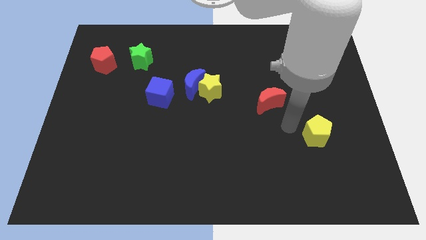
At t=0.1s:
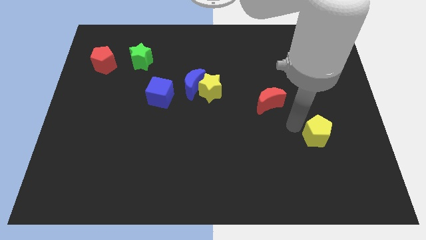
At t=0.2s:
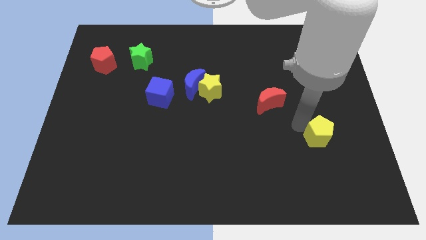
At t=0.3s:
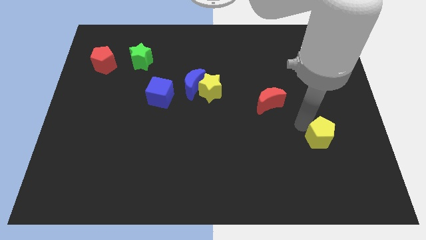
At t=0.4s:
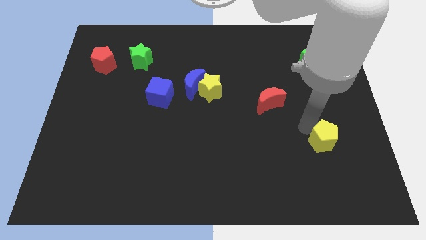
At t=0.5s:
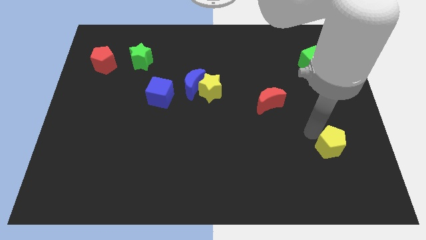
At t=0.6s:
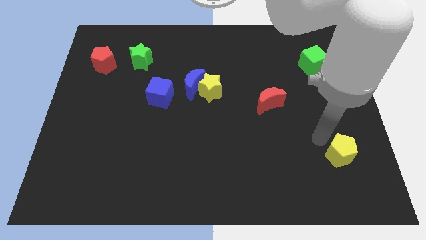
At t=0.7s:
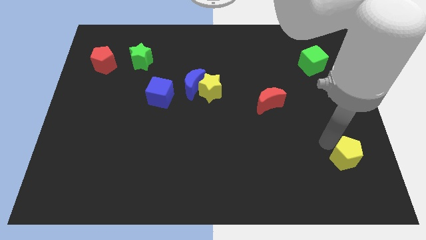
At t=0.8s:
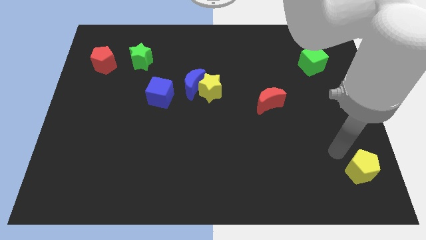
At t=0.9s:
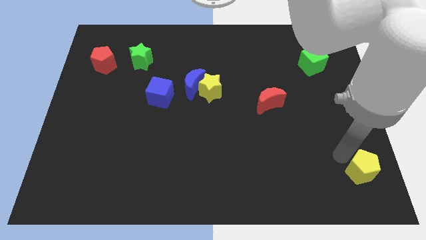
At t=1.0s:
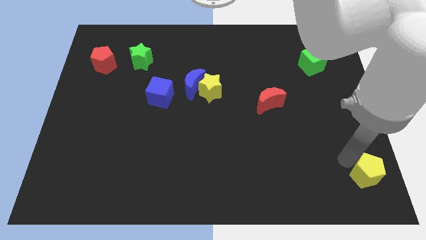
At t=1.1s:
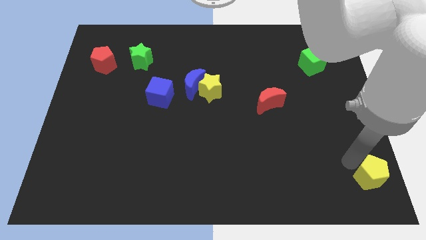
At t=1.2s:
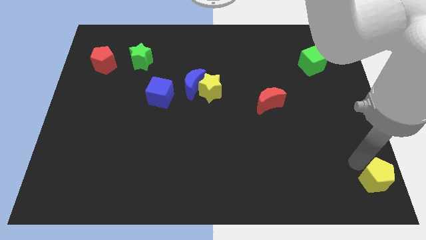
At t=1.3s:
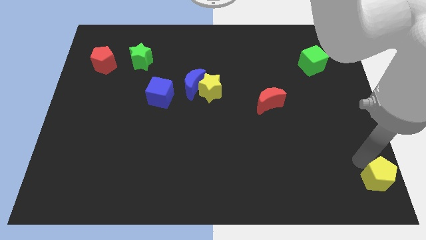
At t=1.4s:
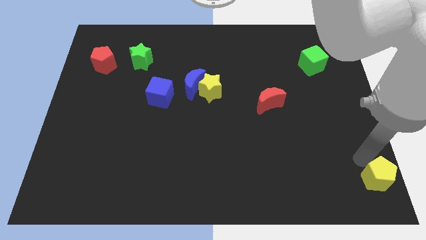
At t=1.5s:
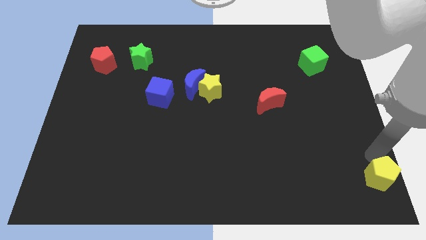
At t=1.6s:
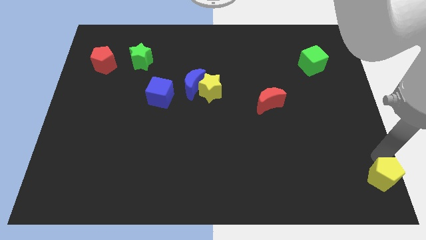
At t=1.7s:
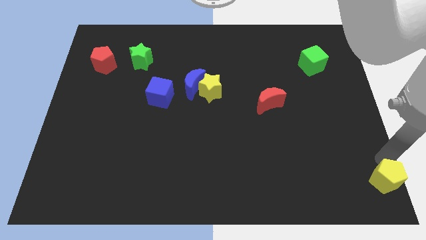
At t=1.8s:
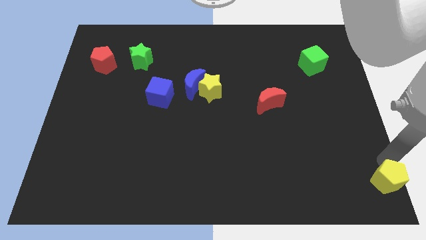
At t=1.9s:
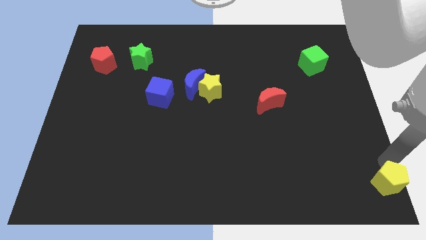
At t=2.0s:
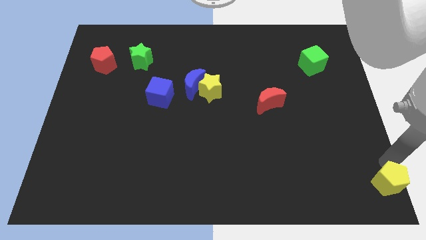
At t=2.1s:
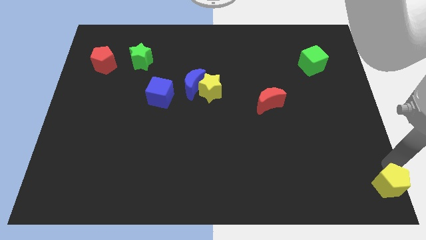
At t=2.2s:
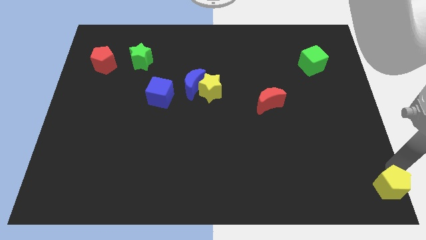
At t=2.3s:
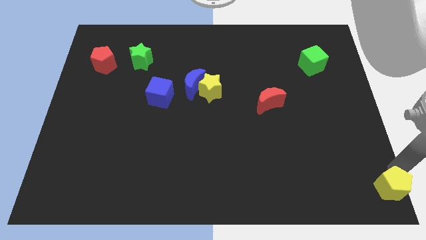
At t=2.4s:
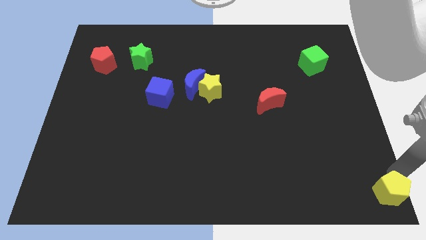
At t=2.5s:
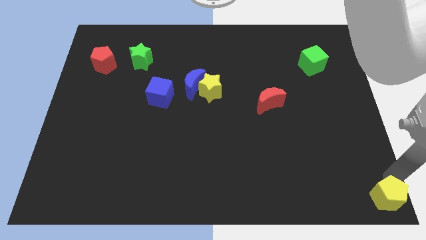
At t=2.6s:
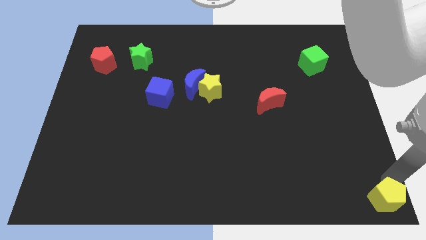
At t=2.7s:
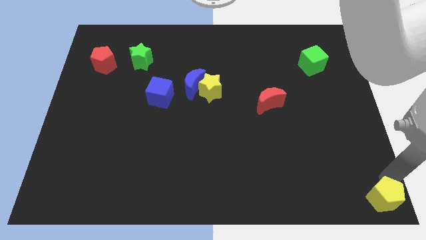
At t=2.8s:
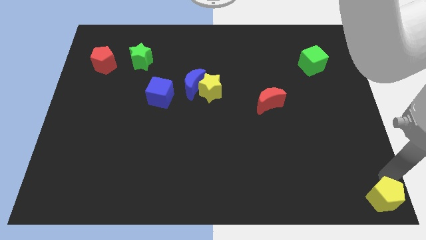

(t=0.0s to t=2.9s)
push the yellow pentagon to the bottom right of the board

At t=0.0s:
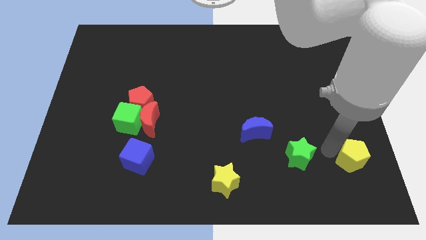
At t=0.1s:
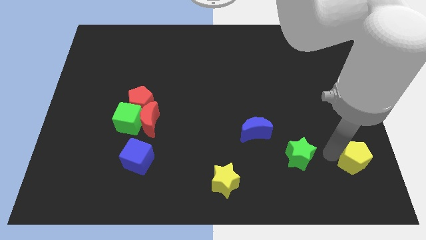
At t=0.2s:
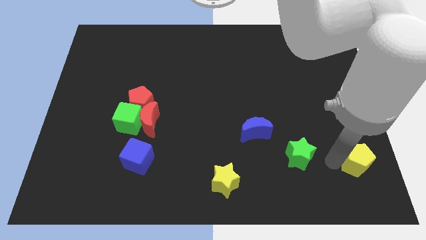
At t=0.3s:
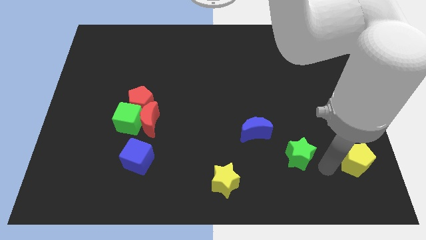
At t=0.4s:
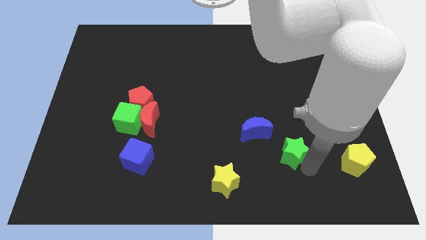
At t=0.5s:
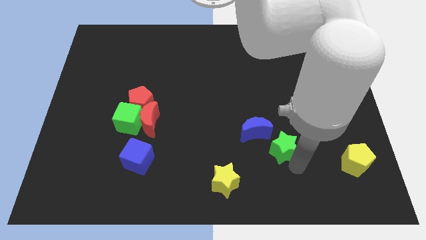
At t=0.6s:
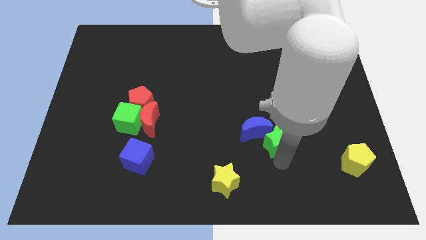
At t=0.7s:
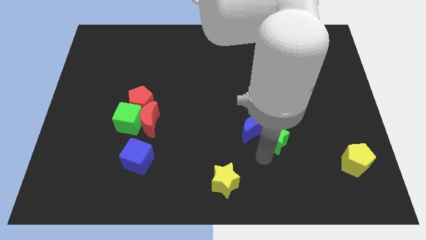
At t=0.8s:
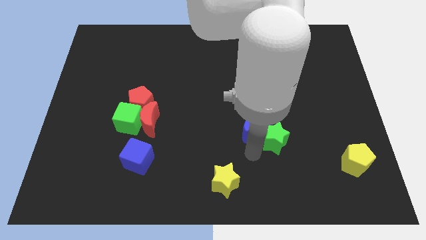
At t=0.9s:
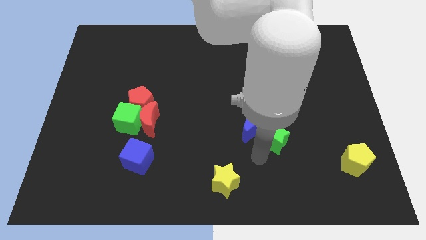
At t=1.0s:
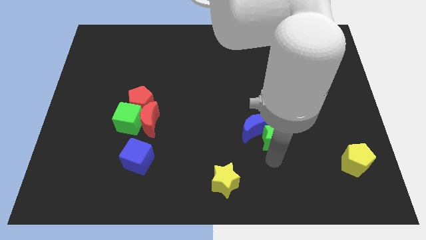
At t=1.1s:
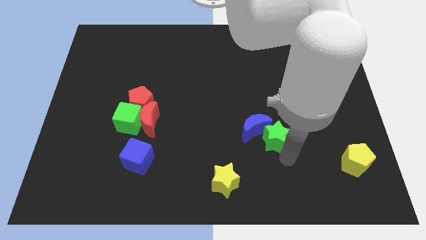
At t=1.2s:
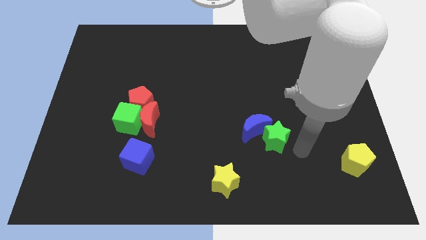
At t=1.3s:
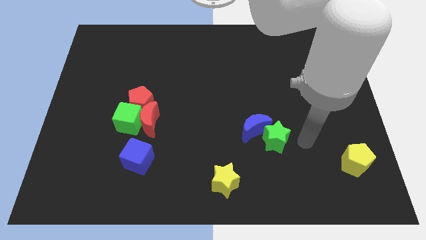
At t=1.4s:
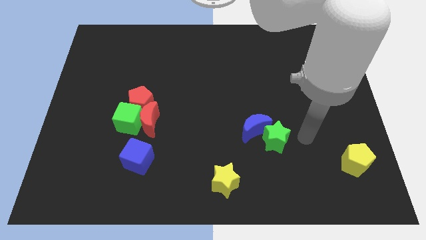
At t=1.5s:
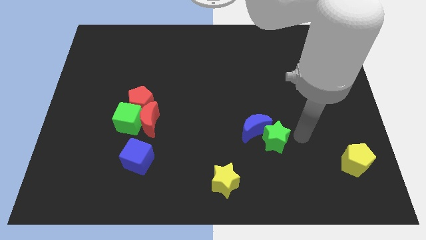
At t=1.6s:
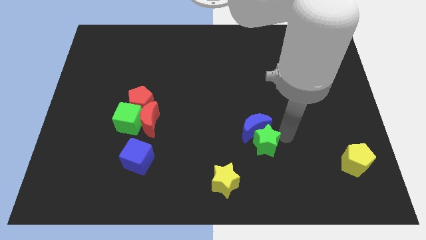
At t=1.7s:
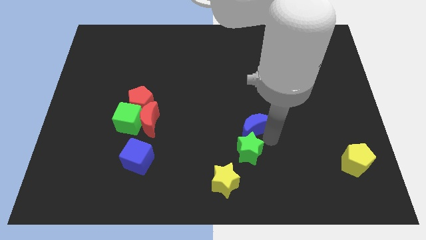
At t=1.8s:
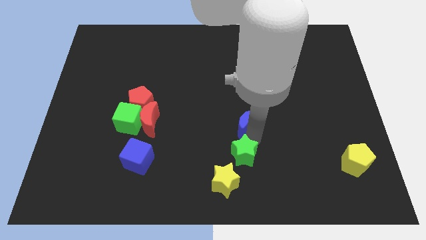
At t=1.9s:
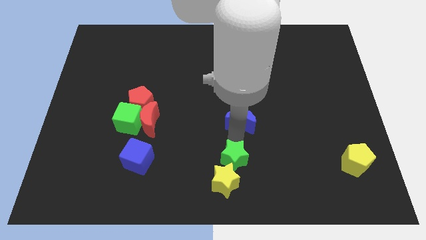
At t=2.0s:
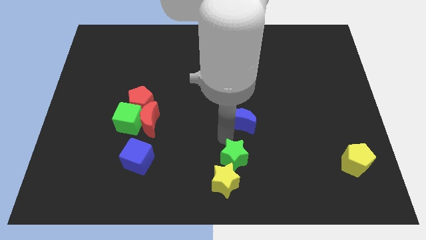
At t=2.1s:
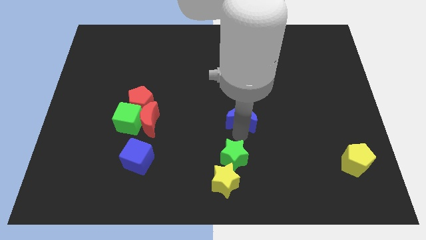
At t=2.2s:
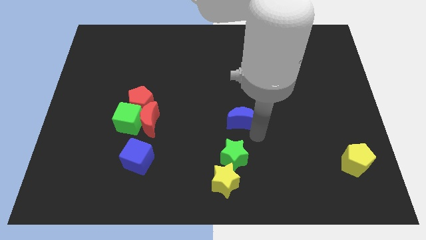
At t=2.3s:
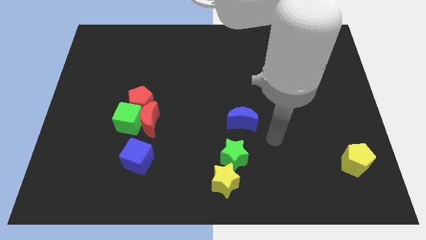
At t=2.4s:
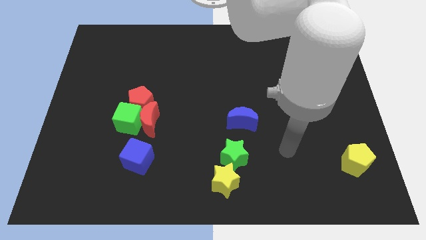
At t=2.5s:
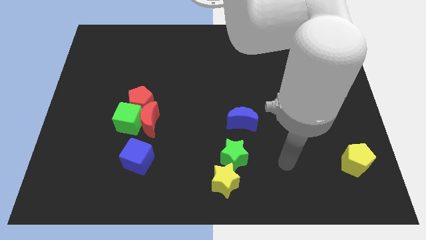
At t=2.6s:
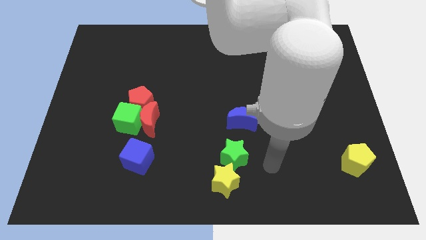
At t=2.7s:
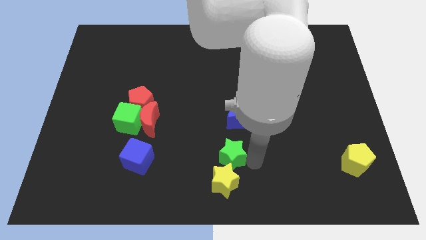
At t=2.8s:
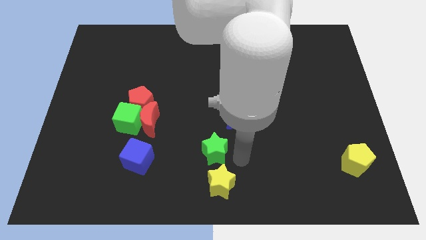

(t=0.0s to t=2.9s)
push the green star to the top of the yellow star

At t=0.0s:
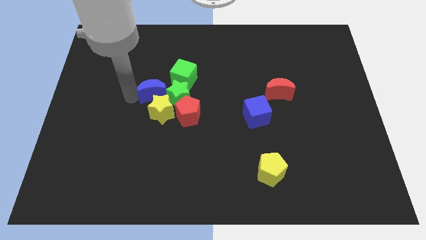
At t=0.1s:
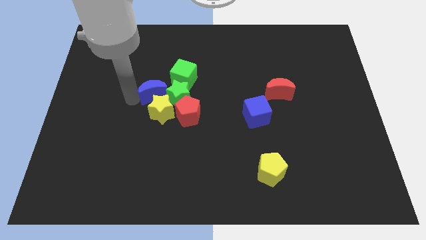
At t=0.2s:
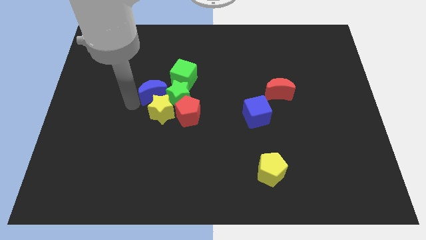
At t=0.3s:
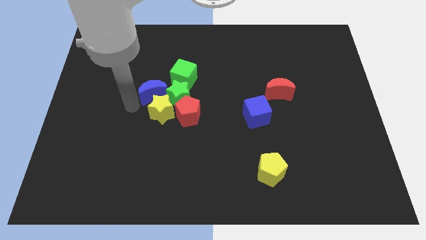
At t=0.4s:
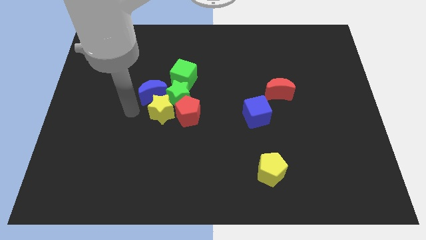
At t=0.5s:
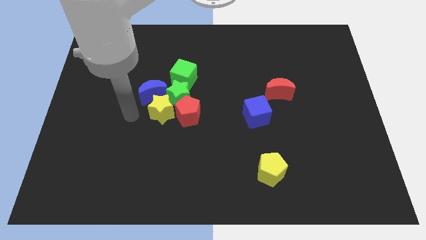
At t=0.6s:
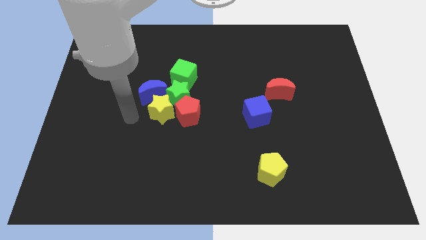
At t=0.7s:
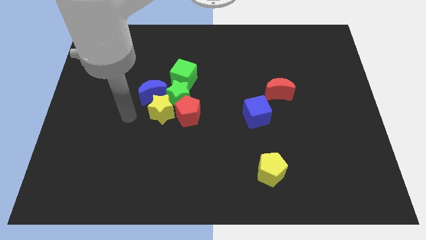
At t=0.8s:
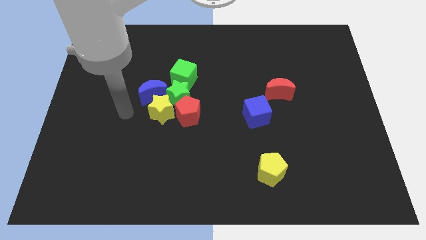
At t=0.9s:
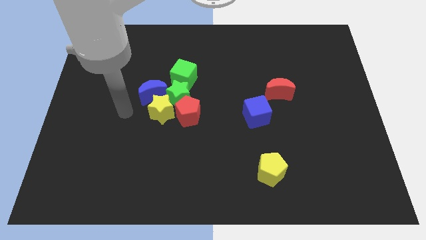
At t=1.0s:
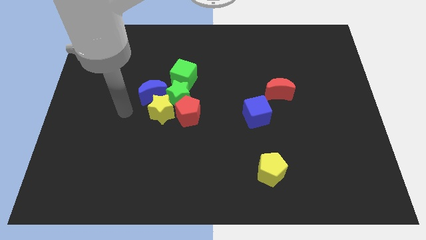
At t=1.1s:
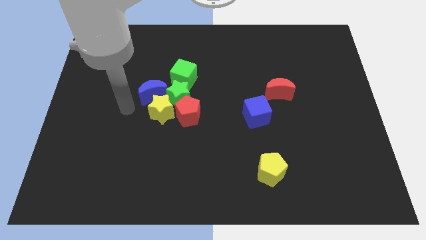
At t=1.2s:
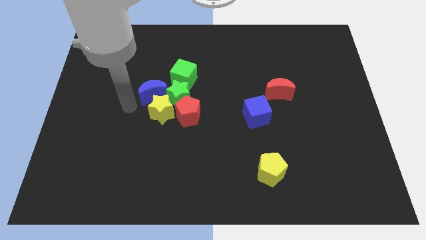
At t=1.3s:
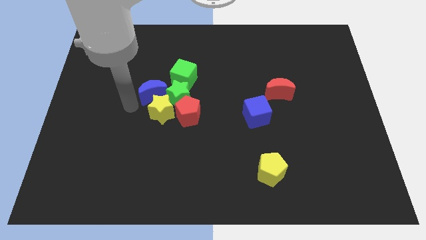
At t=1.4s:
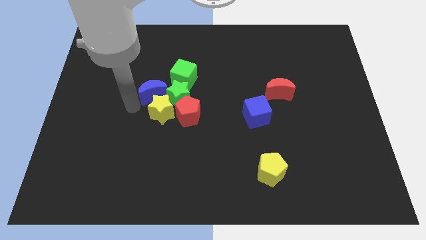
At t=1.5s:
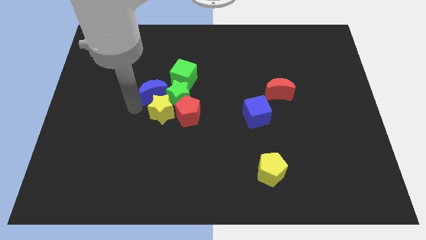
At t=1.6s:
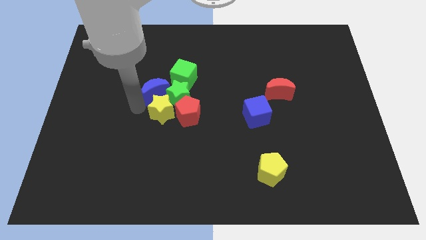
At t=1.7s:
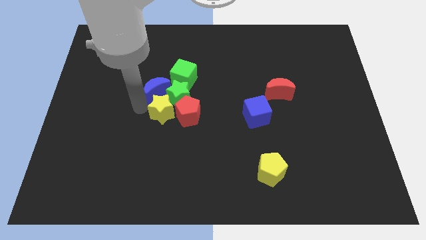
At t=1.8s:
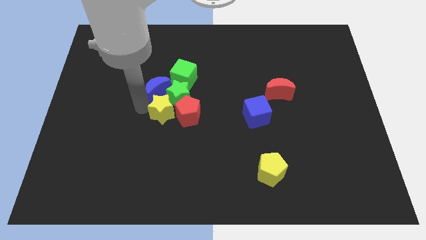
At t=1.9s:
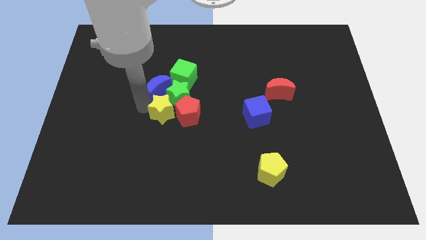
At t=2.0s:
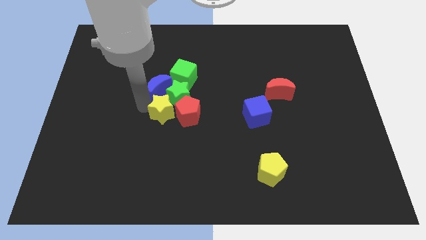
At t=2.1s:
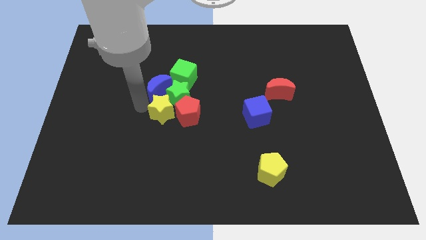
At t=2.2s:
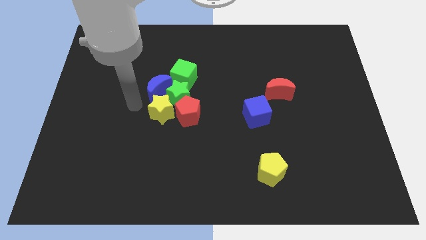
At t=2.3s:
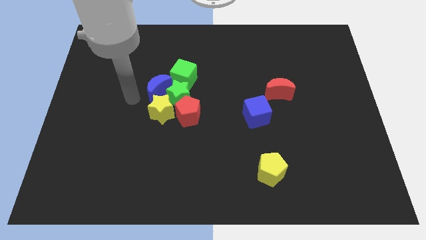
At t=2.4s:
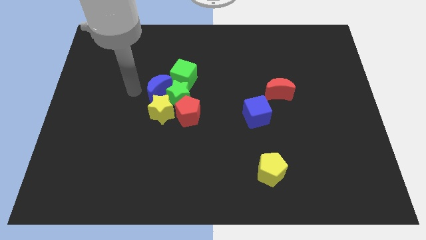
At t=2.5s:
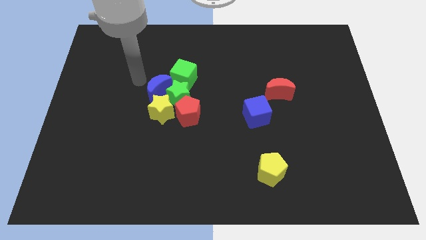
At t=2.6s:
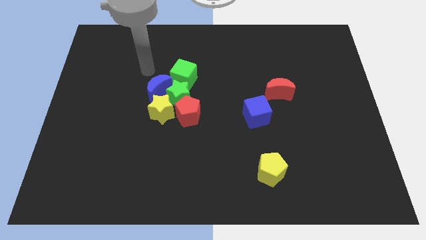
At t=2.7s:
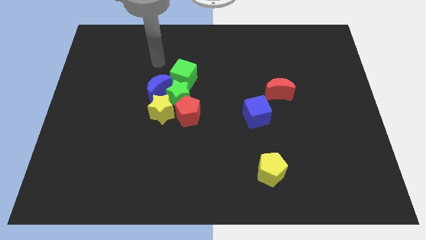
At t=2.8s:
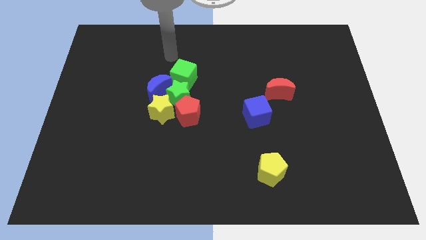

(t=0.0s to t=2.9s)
adjust the blue moon into the group of blocks

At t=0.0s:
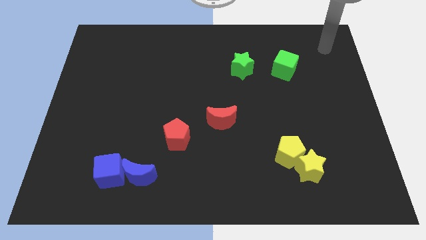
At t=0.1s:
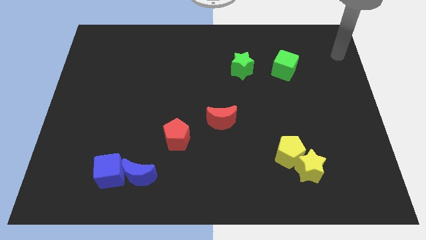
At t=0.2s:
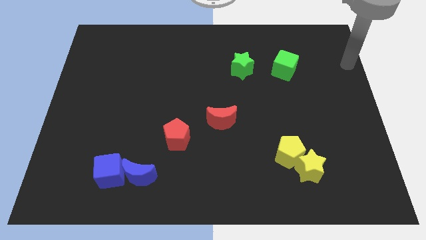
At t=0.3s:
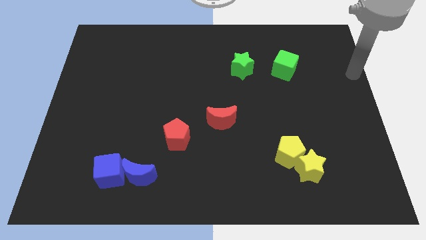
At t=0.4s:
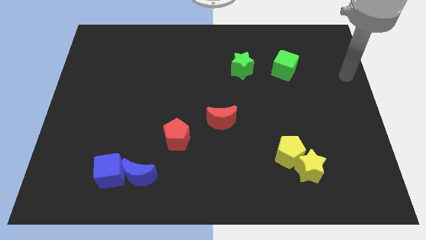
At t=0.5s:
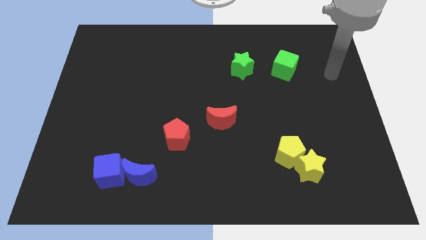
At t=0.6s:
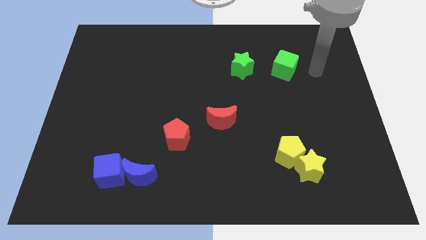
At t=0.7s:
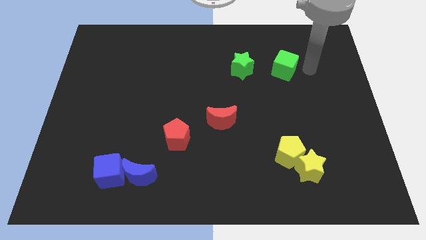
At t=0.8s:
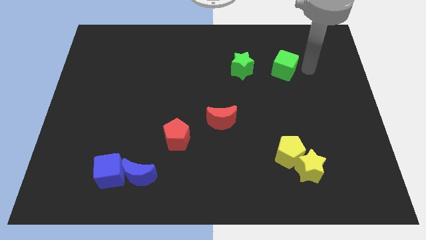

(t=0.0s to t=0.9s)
move arm close to green cube
